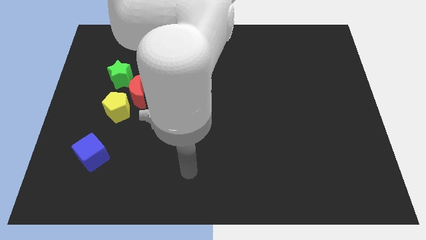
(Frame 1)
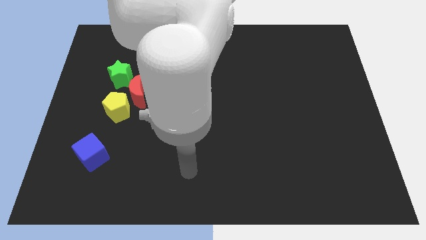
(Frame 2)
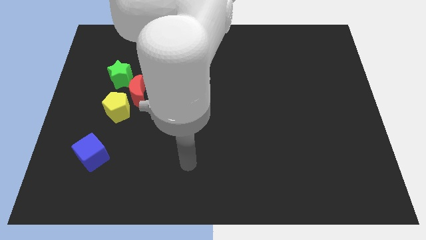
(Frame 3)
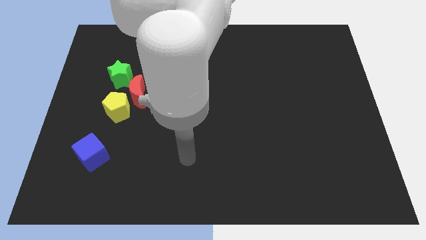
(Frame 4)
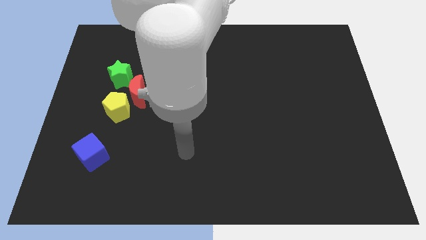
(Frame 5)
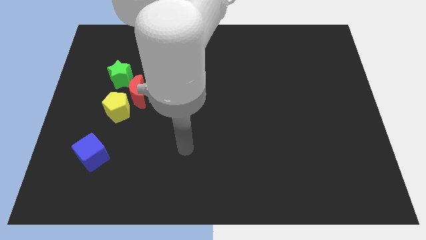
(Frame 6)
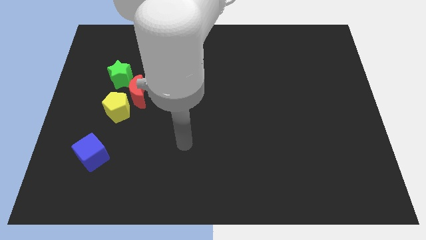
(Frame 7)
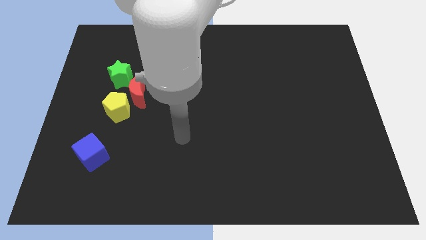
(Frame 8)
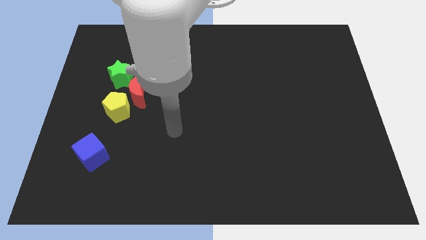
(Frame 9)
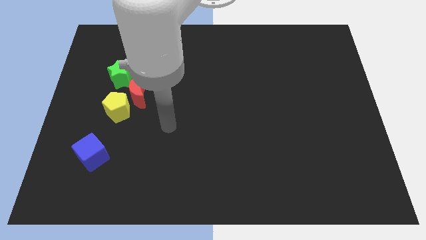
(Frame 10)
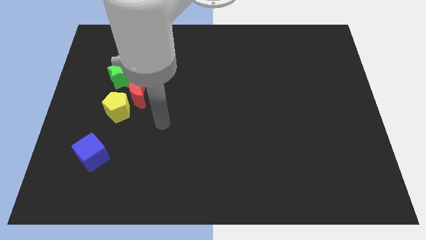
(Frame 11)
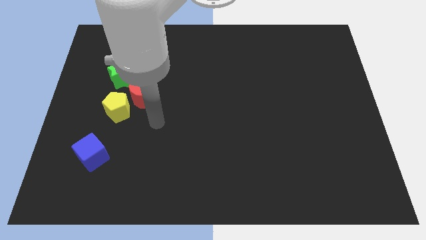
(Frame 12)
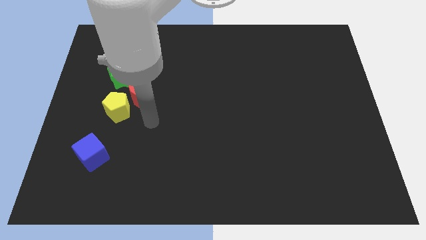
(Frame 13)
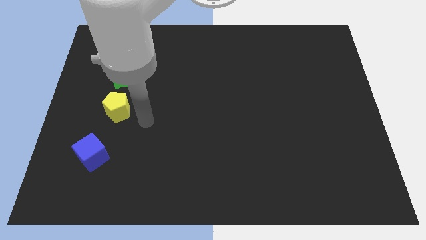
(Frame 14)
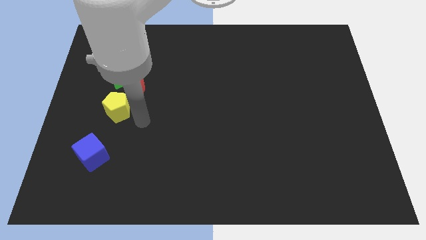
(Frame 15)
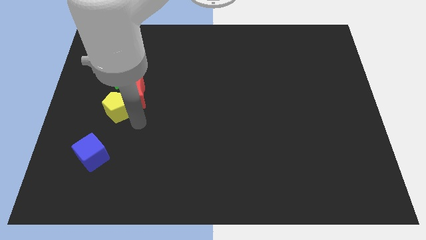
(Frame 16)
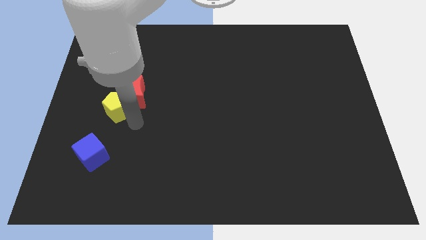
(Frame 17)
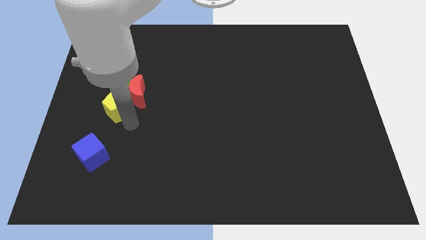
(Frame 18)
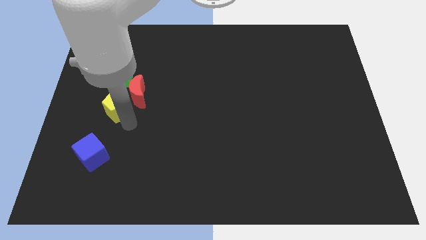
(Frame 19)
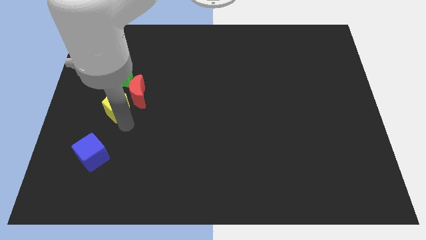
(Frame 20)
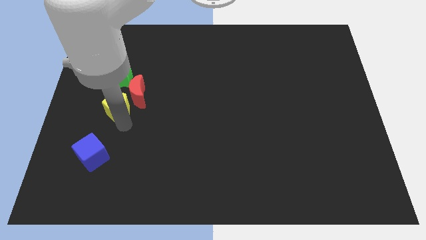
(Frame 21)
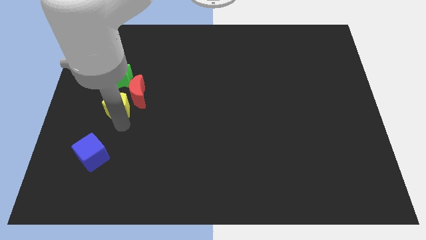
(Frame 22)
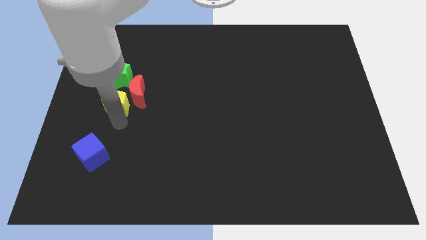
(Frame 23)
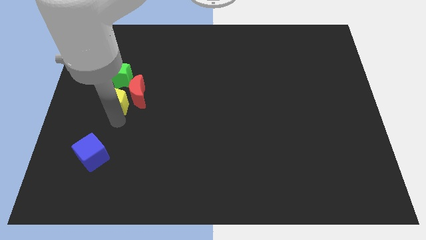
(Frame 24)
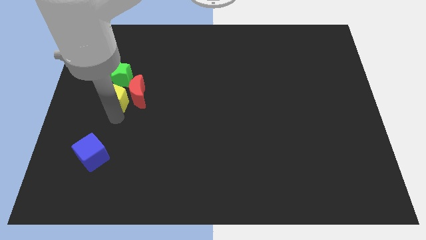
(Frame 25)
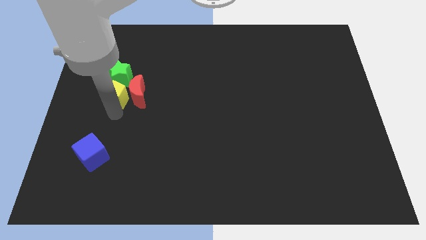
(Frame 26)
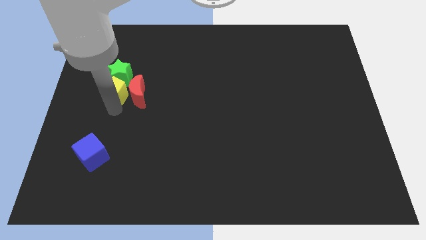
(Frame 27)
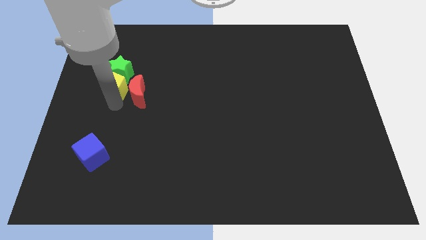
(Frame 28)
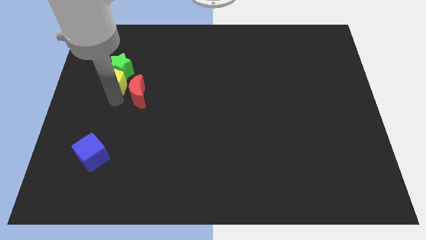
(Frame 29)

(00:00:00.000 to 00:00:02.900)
push the yellow pentagon next to the green block

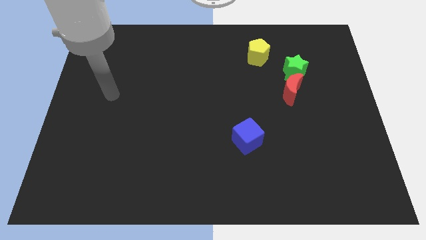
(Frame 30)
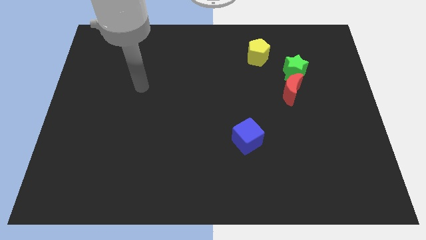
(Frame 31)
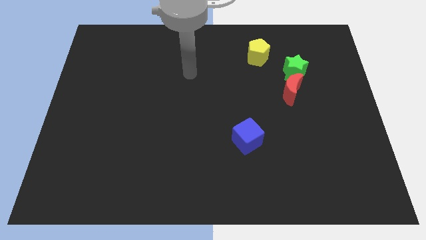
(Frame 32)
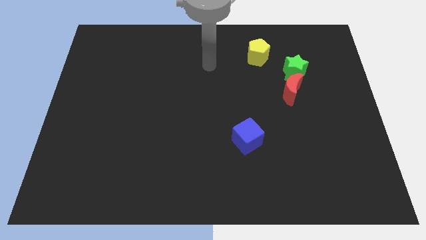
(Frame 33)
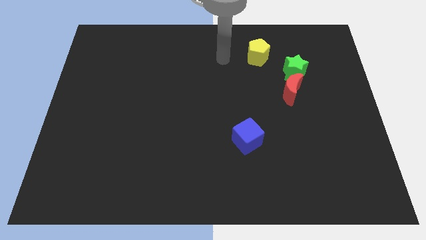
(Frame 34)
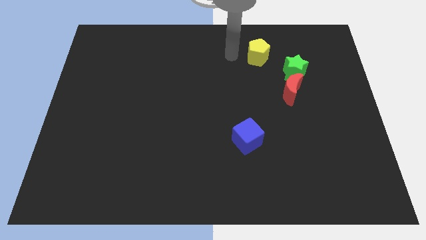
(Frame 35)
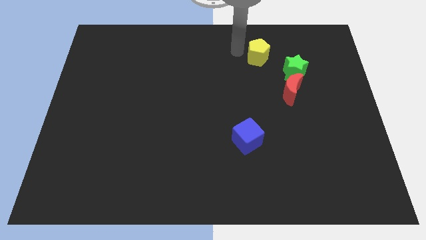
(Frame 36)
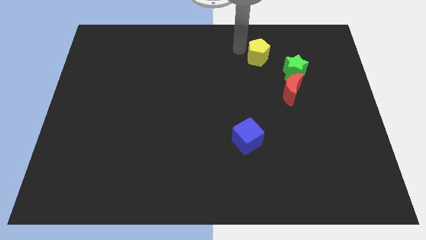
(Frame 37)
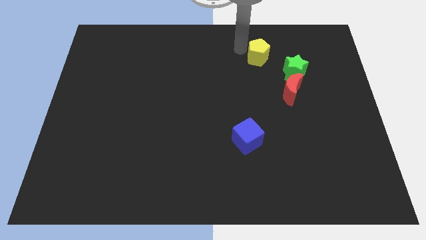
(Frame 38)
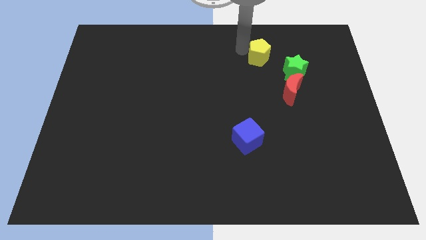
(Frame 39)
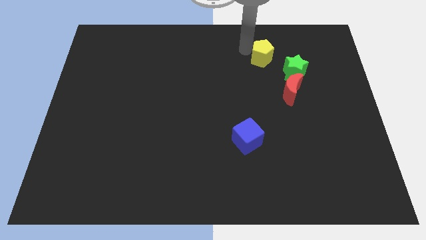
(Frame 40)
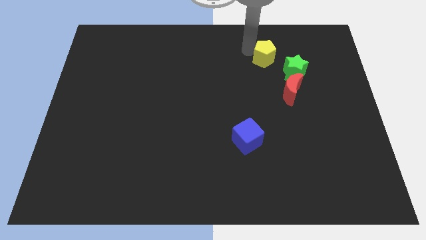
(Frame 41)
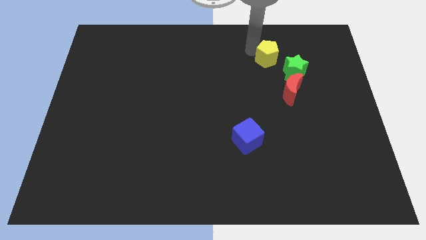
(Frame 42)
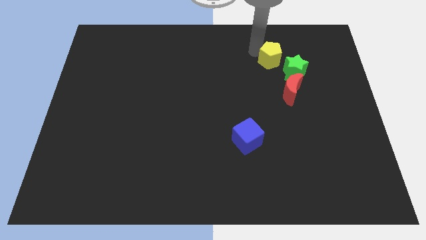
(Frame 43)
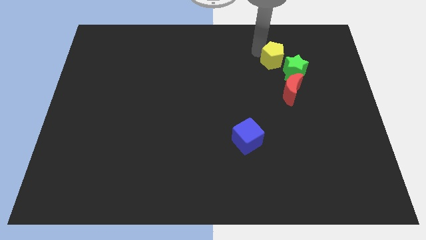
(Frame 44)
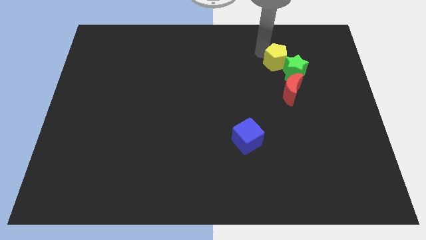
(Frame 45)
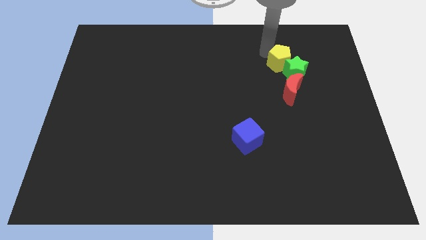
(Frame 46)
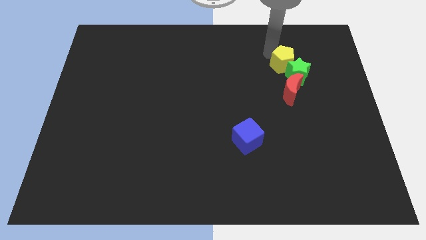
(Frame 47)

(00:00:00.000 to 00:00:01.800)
slide the yellow block to the star

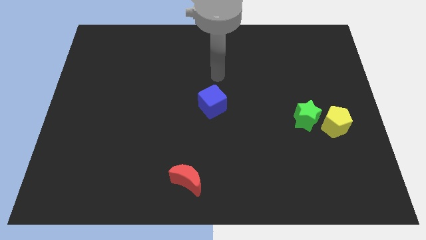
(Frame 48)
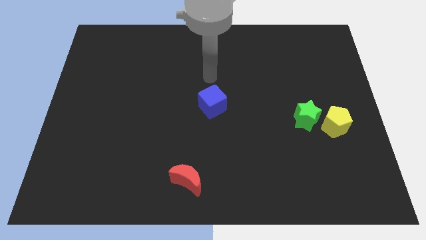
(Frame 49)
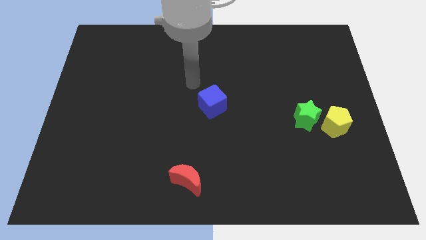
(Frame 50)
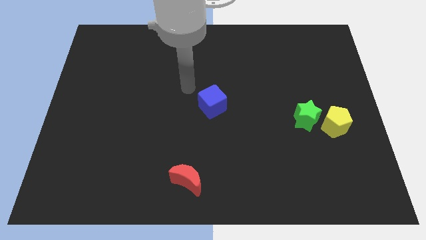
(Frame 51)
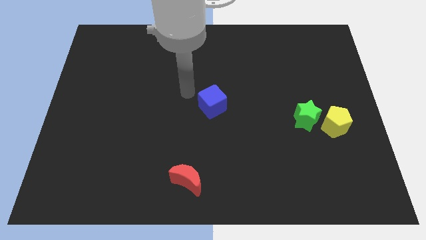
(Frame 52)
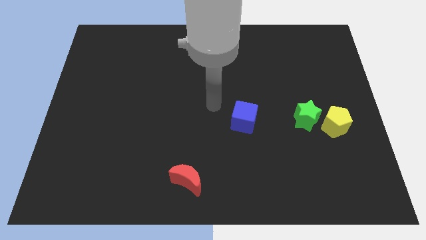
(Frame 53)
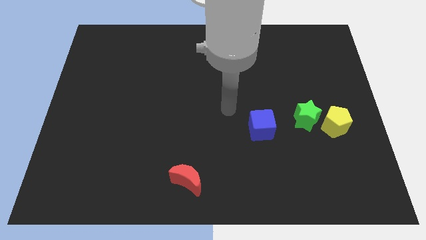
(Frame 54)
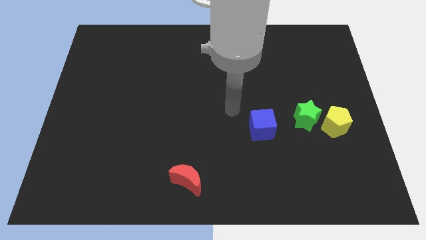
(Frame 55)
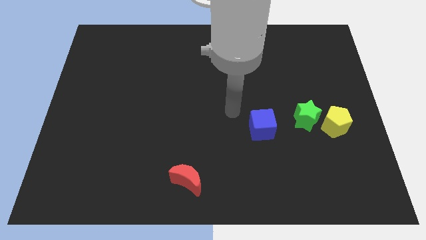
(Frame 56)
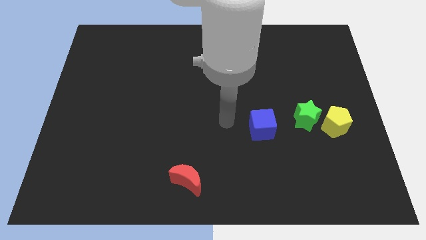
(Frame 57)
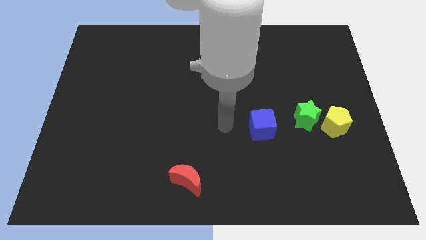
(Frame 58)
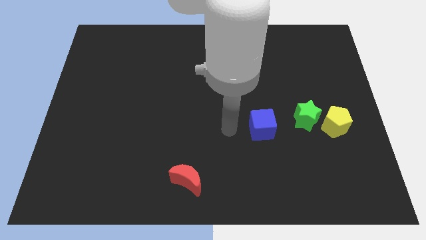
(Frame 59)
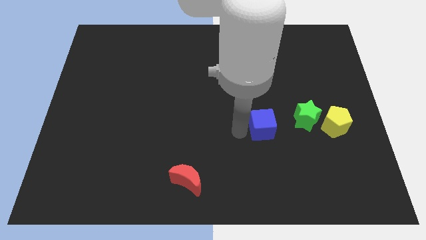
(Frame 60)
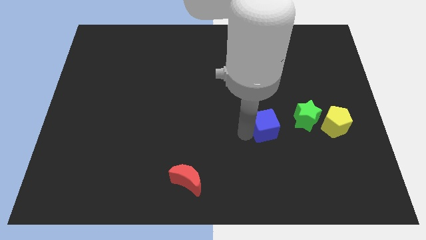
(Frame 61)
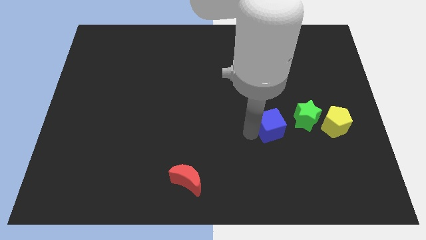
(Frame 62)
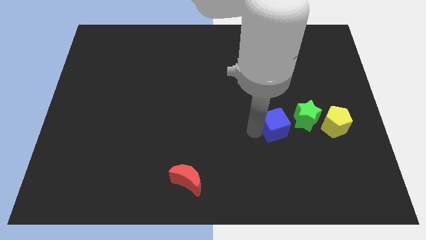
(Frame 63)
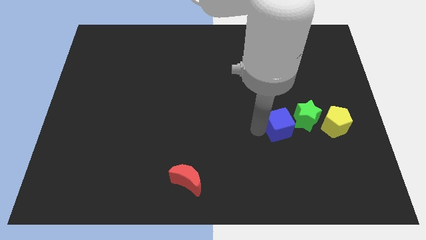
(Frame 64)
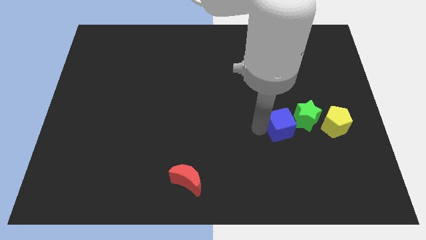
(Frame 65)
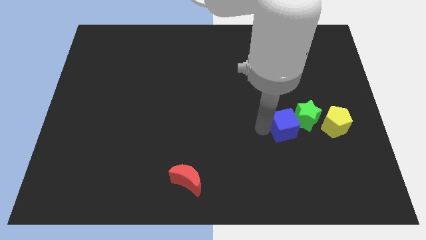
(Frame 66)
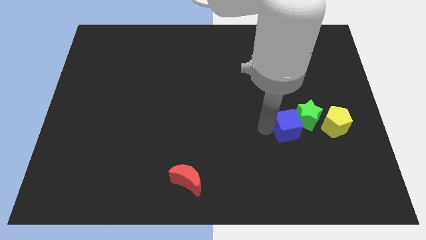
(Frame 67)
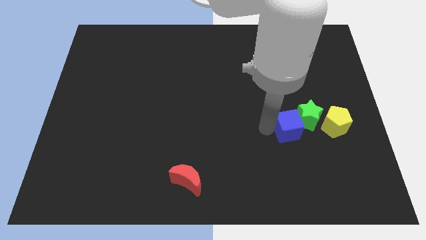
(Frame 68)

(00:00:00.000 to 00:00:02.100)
move the cube next to the star

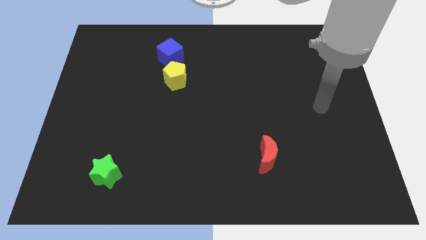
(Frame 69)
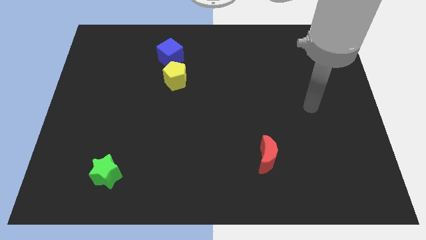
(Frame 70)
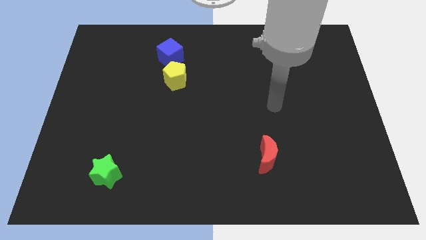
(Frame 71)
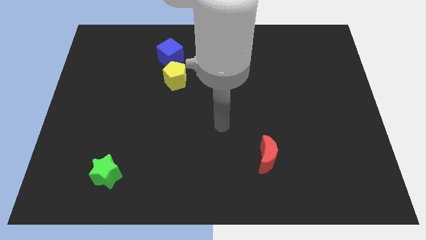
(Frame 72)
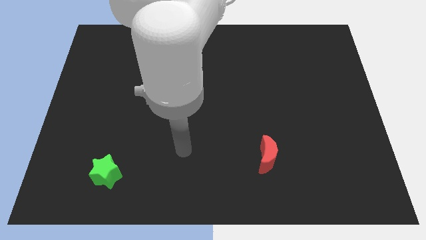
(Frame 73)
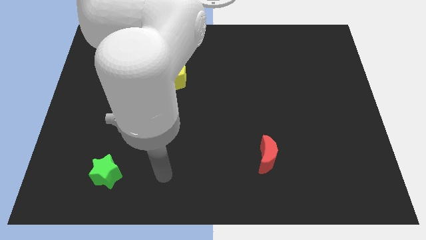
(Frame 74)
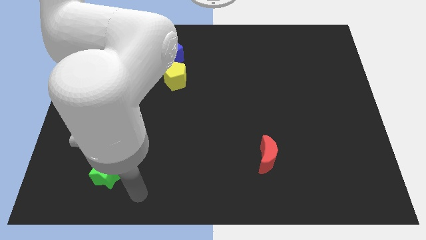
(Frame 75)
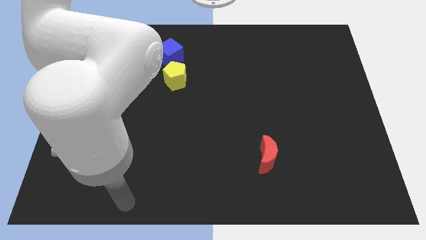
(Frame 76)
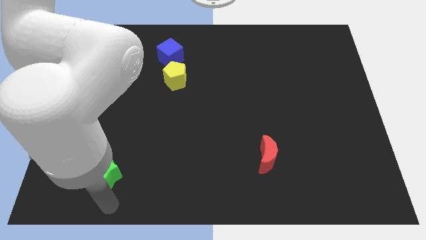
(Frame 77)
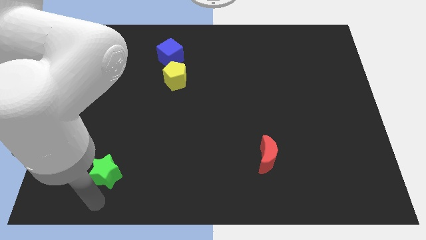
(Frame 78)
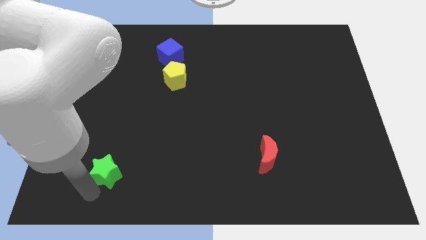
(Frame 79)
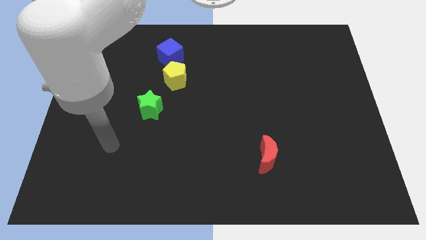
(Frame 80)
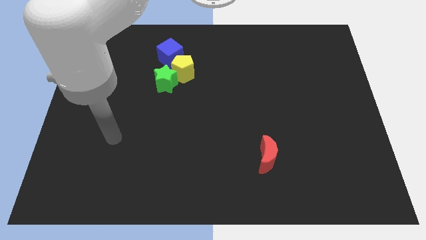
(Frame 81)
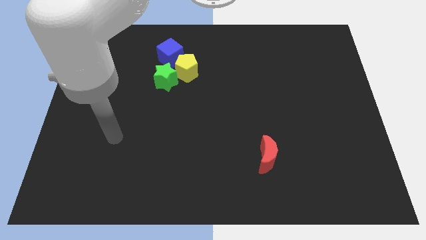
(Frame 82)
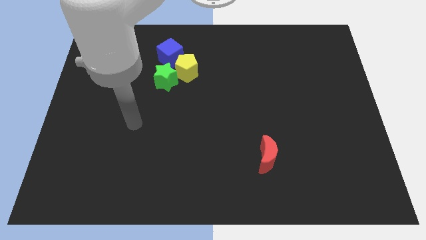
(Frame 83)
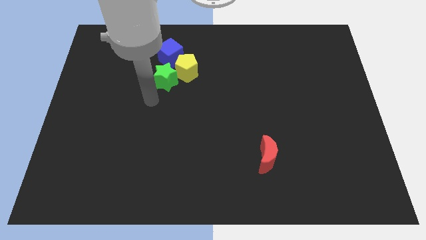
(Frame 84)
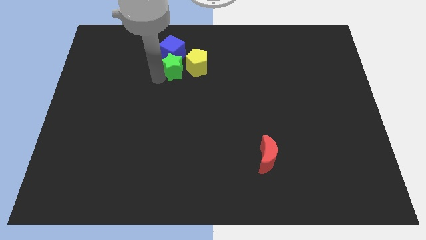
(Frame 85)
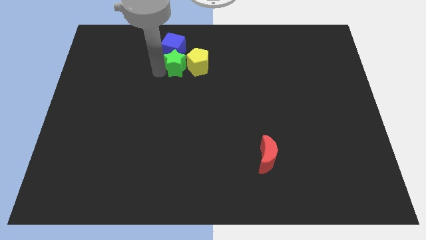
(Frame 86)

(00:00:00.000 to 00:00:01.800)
put the green block towards the blue cube
